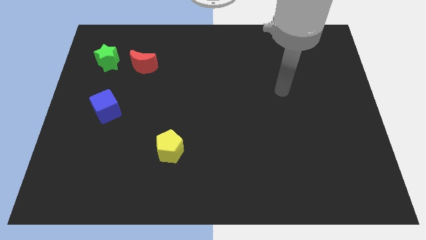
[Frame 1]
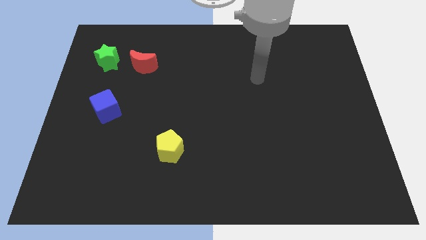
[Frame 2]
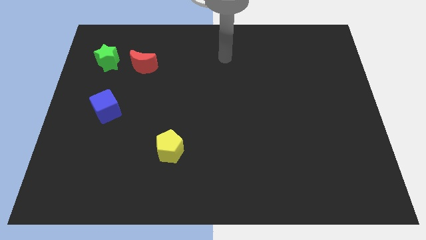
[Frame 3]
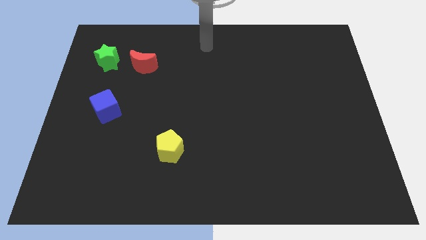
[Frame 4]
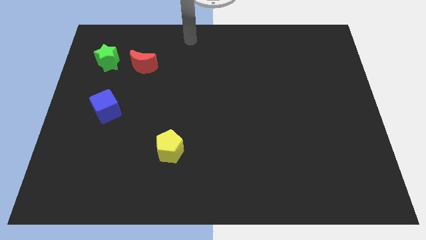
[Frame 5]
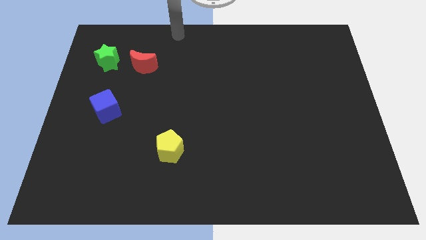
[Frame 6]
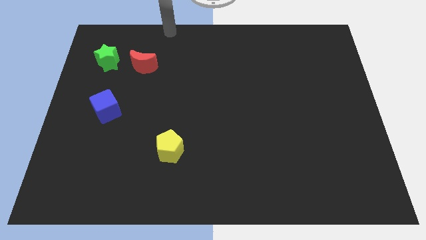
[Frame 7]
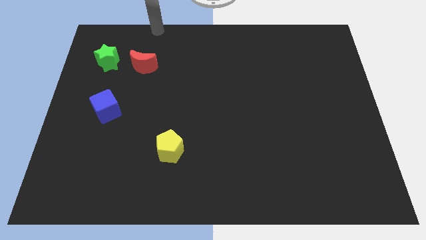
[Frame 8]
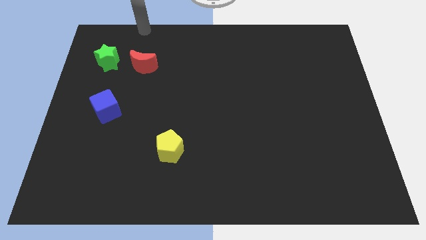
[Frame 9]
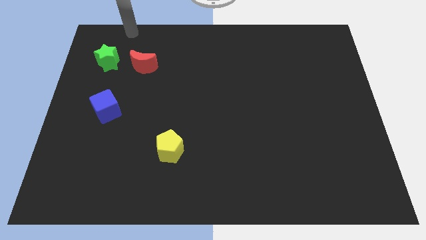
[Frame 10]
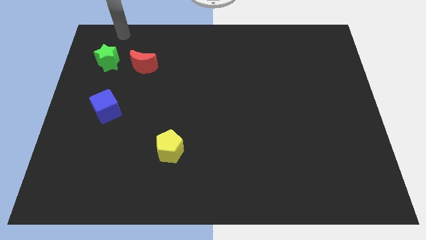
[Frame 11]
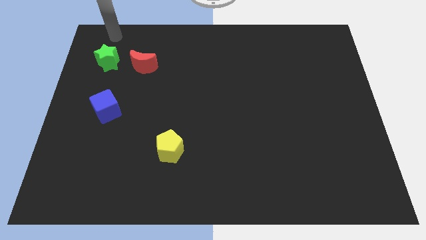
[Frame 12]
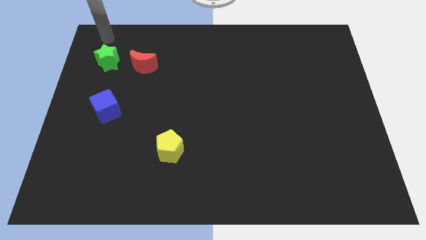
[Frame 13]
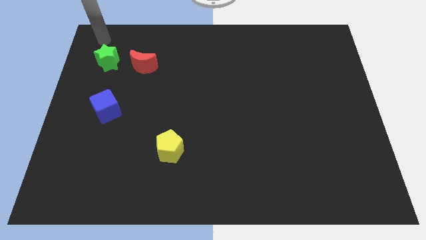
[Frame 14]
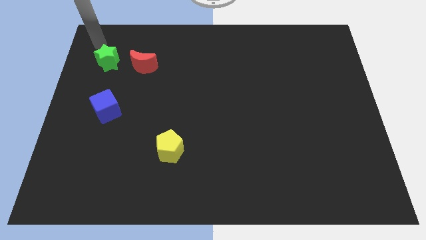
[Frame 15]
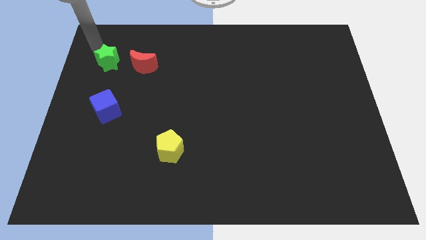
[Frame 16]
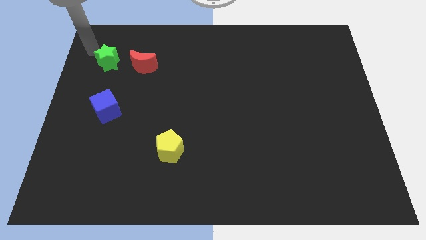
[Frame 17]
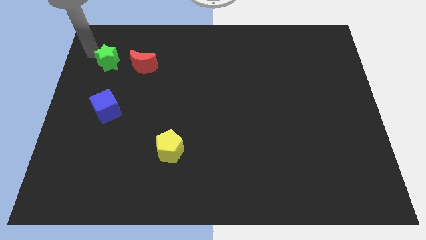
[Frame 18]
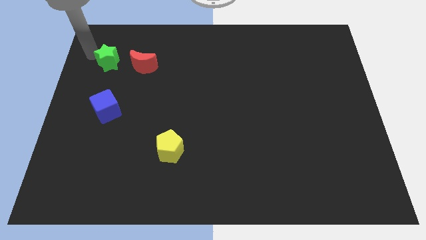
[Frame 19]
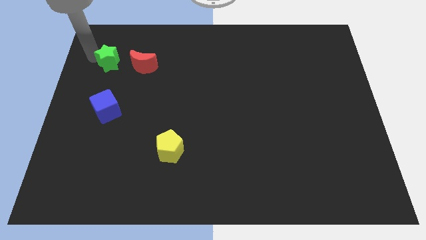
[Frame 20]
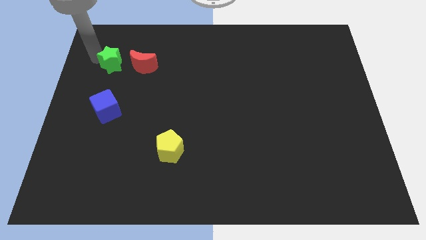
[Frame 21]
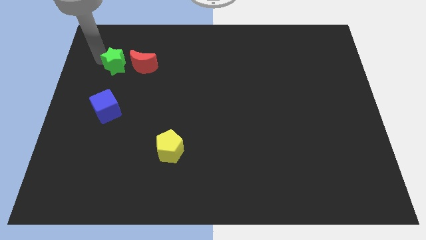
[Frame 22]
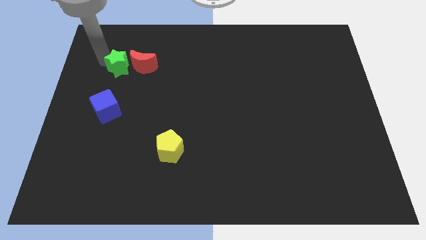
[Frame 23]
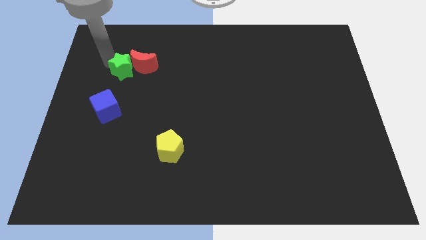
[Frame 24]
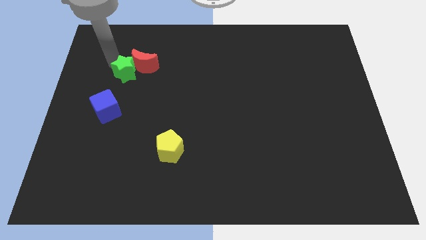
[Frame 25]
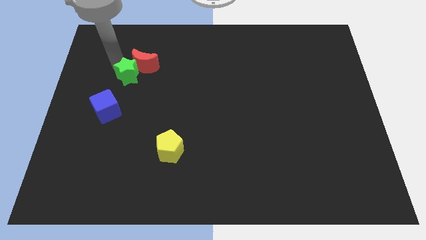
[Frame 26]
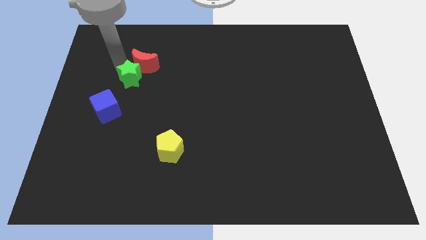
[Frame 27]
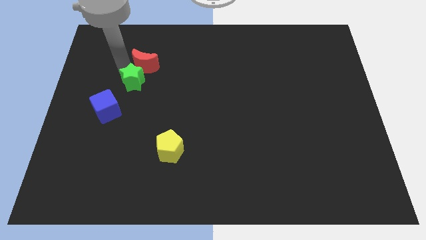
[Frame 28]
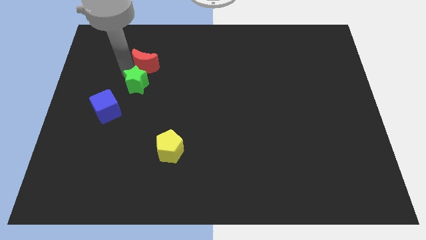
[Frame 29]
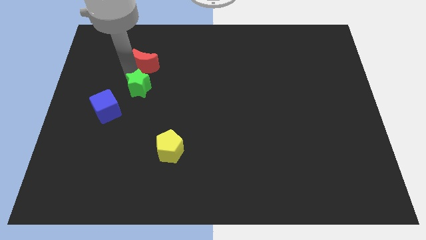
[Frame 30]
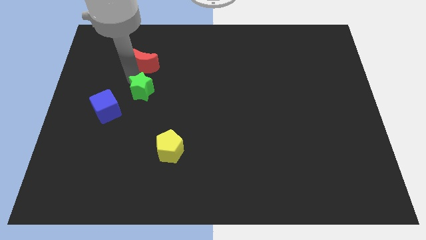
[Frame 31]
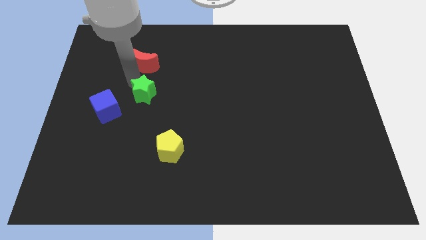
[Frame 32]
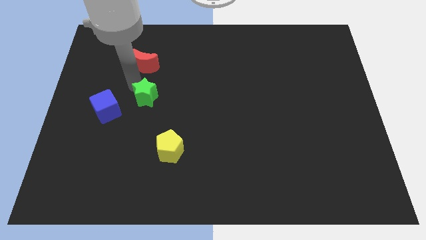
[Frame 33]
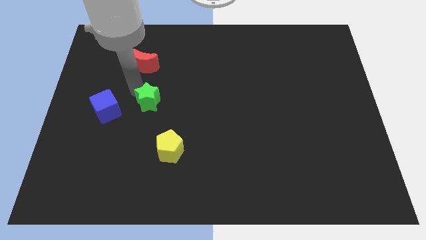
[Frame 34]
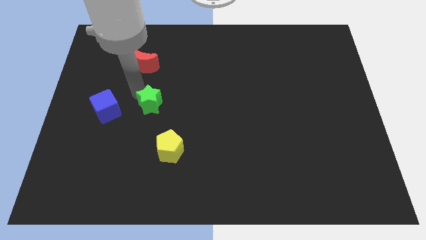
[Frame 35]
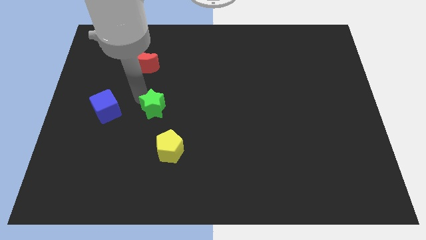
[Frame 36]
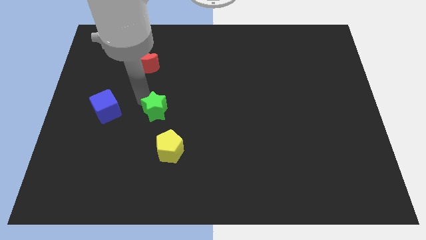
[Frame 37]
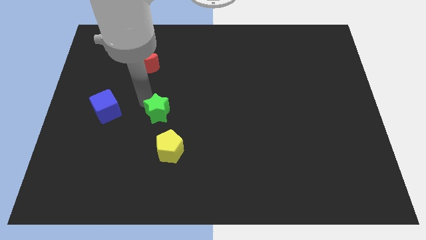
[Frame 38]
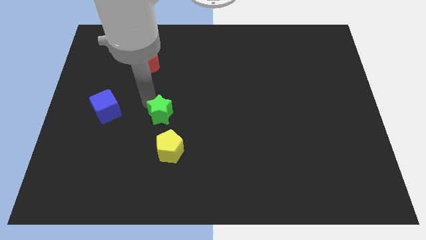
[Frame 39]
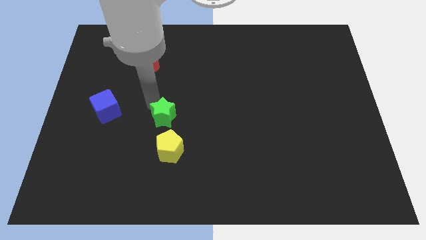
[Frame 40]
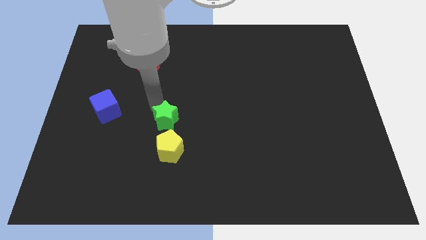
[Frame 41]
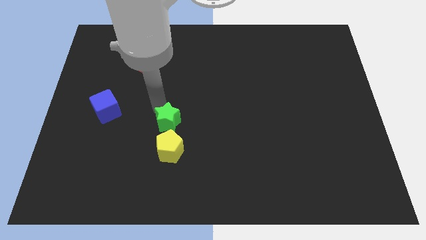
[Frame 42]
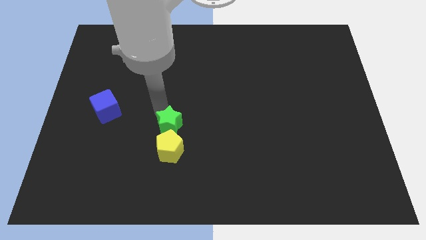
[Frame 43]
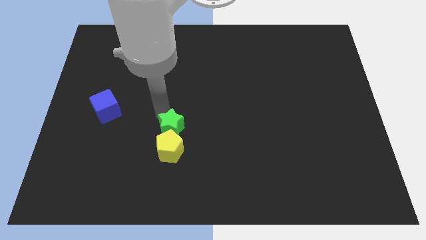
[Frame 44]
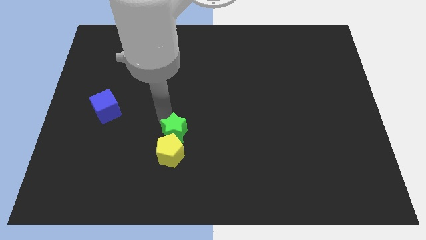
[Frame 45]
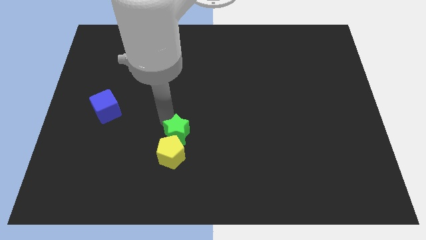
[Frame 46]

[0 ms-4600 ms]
move the star close to the yellow pentagon

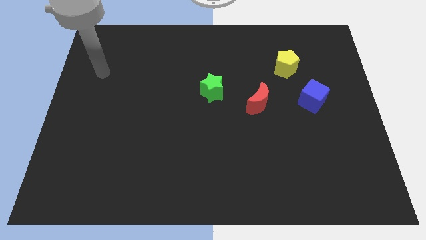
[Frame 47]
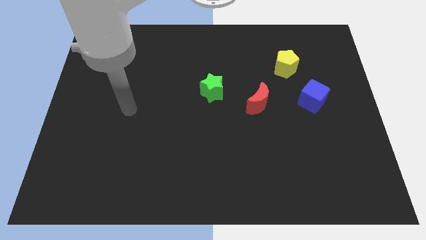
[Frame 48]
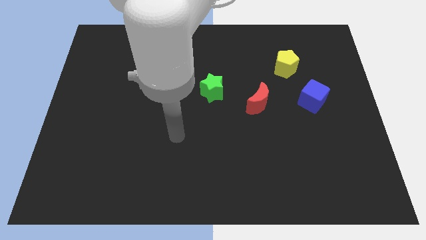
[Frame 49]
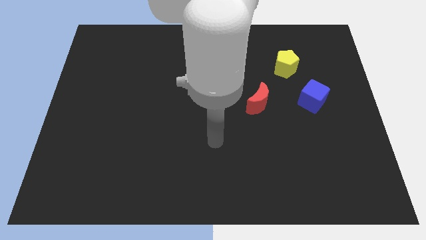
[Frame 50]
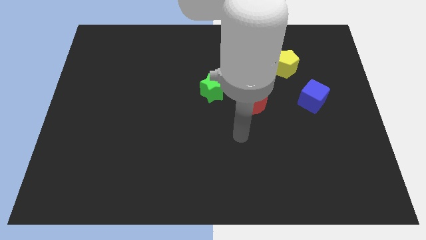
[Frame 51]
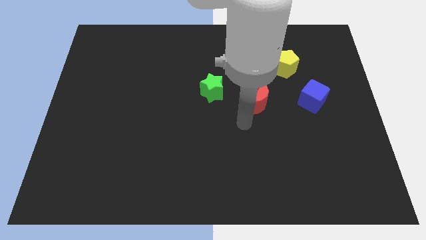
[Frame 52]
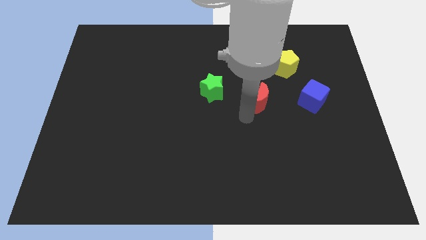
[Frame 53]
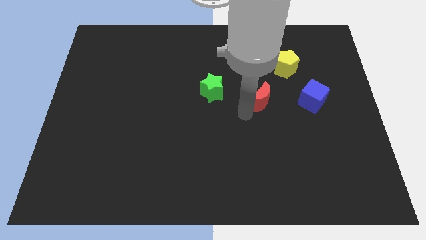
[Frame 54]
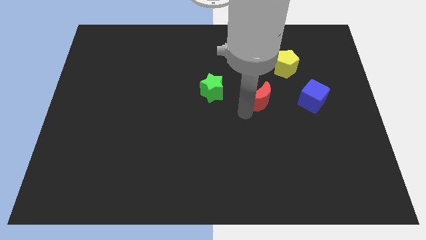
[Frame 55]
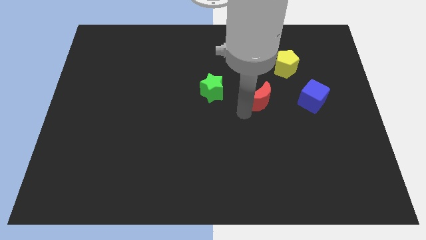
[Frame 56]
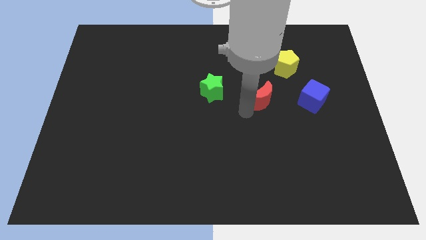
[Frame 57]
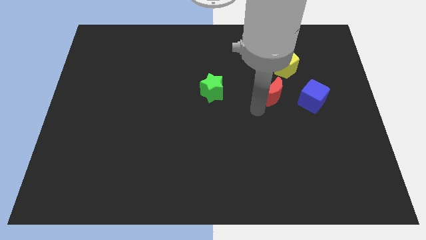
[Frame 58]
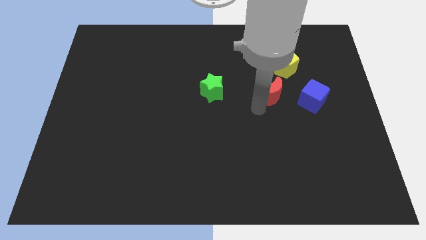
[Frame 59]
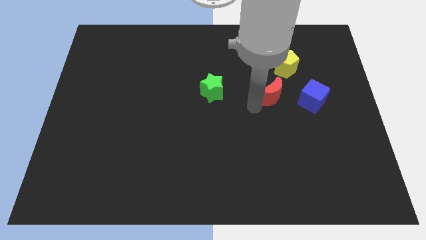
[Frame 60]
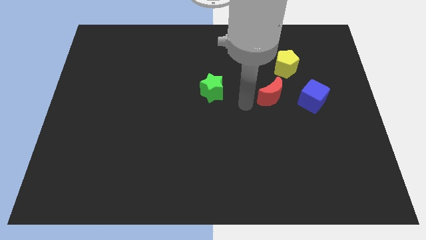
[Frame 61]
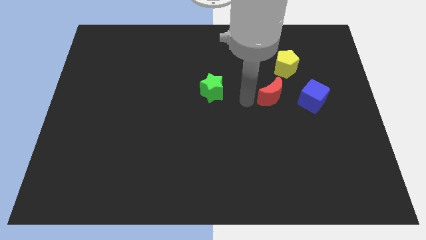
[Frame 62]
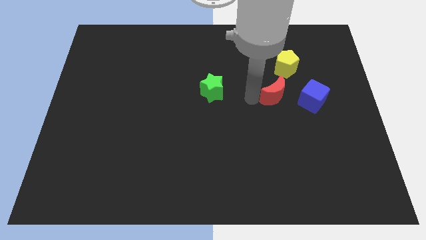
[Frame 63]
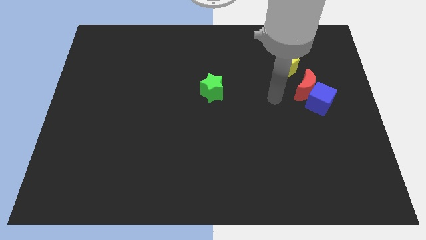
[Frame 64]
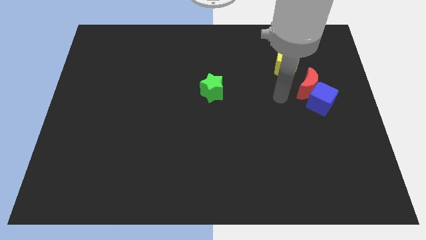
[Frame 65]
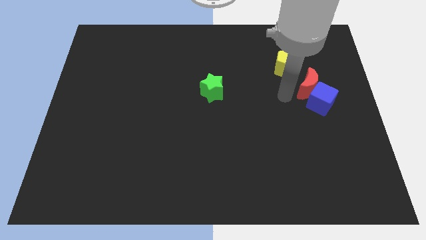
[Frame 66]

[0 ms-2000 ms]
put the red block towards the blue block

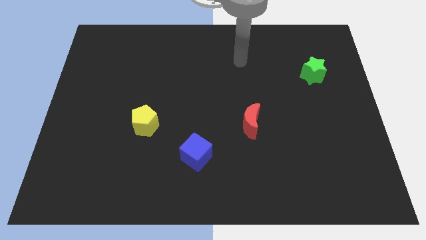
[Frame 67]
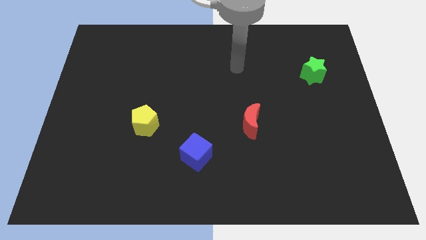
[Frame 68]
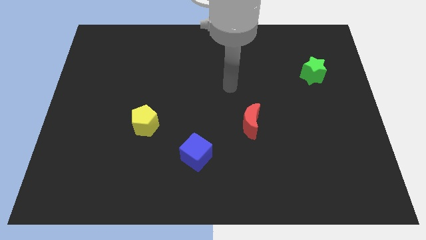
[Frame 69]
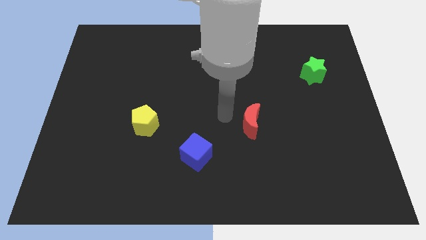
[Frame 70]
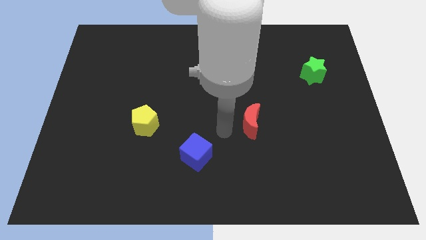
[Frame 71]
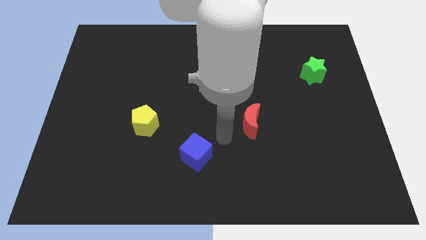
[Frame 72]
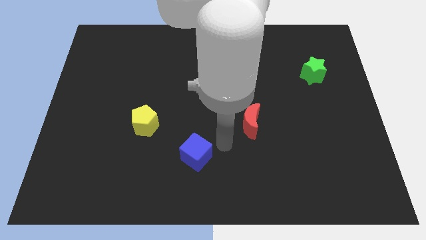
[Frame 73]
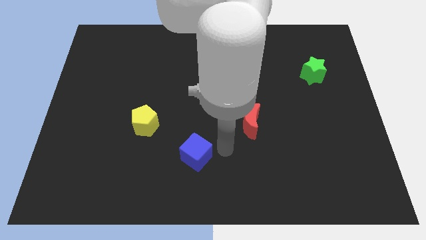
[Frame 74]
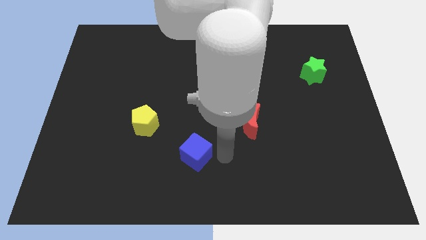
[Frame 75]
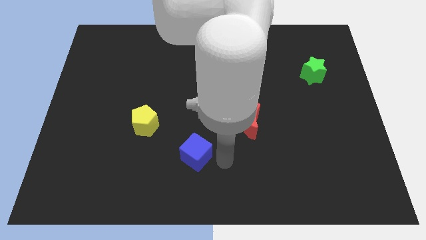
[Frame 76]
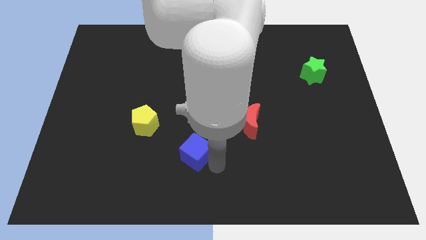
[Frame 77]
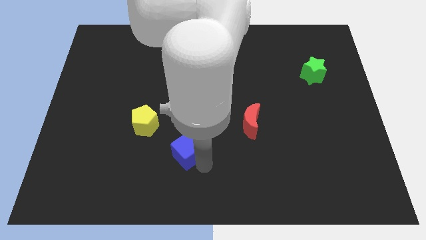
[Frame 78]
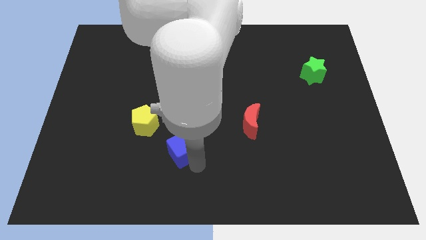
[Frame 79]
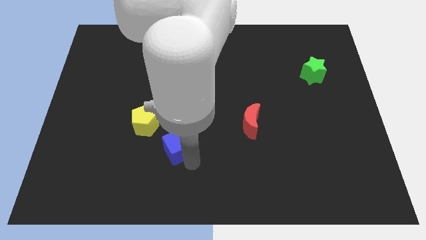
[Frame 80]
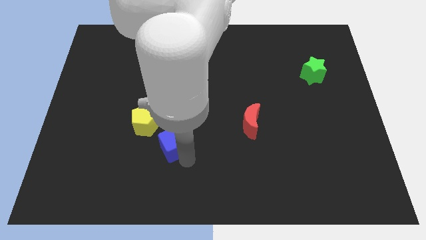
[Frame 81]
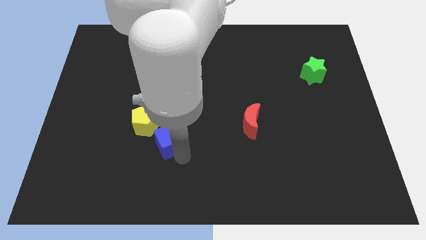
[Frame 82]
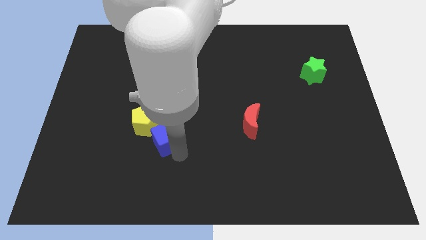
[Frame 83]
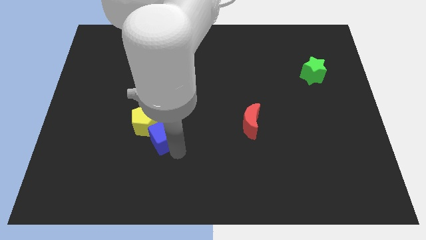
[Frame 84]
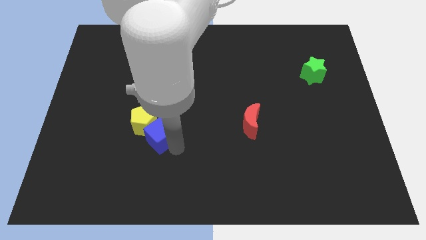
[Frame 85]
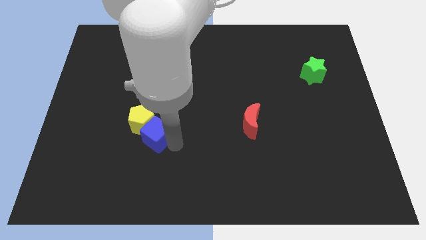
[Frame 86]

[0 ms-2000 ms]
move the cube to the yellow block

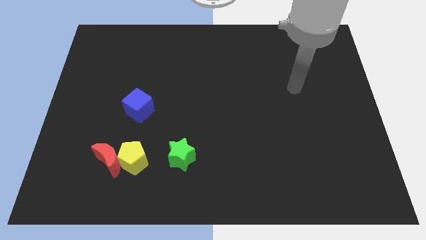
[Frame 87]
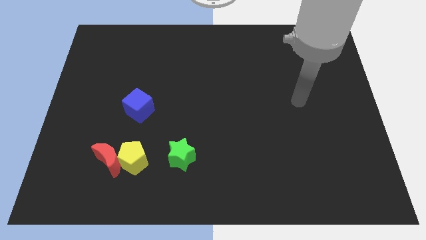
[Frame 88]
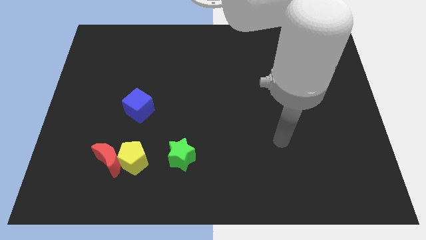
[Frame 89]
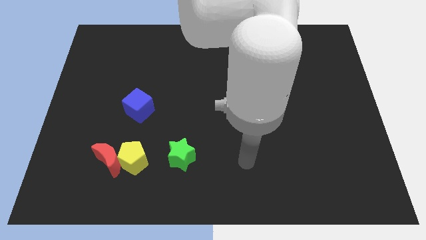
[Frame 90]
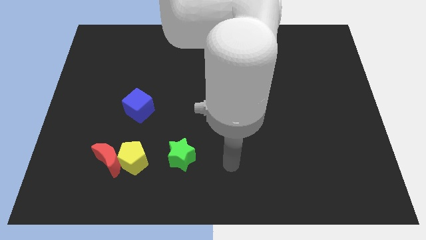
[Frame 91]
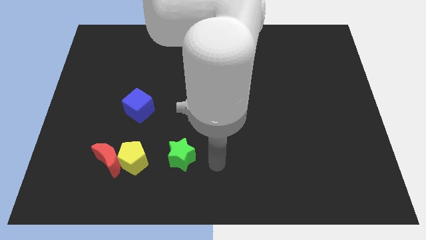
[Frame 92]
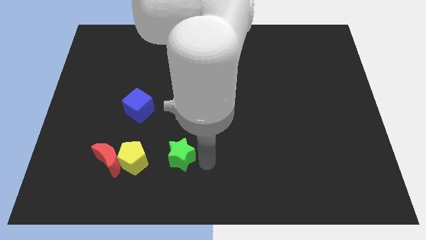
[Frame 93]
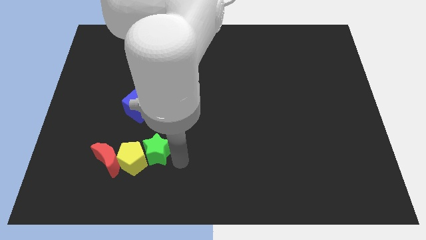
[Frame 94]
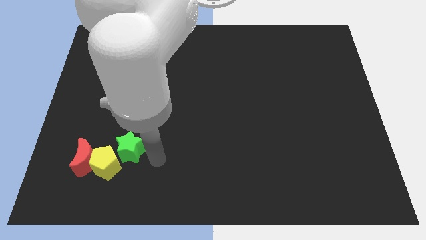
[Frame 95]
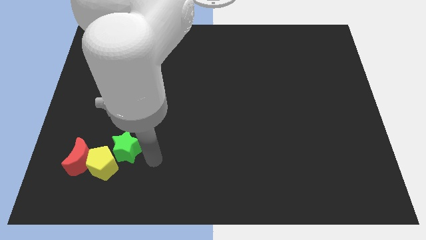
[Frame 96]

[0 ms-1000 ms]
push the green block towards the yellow block
